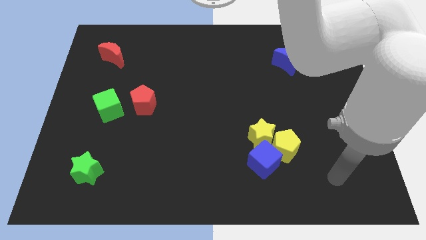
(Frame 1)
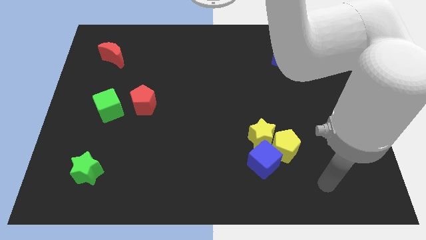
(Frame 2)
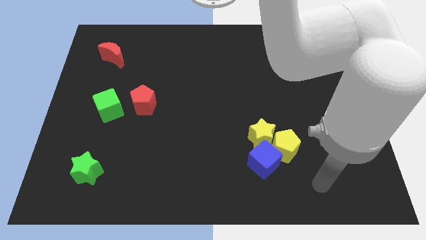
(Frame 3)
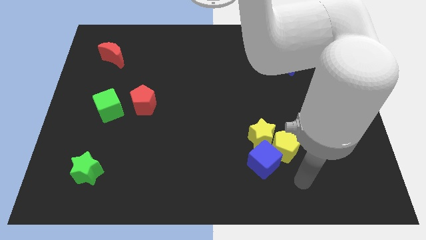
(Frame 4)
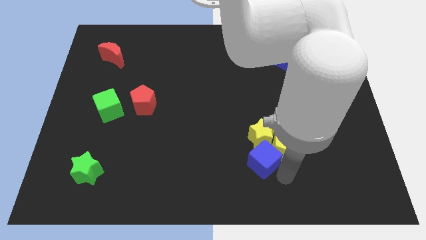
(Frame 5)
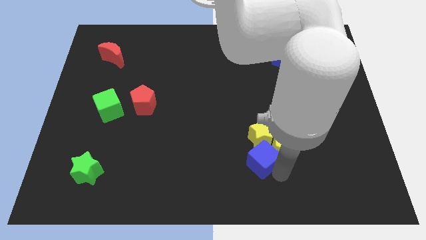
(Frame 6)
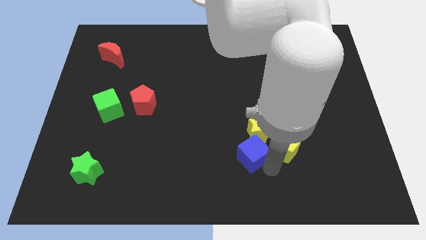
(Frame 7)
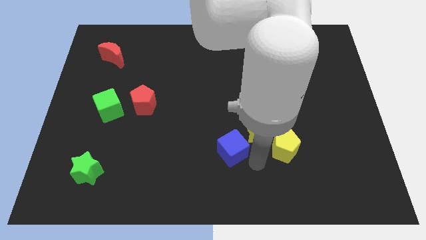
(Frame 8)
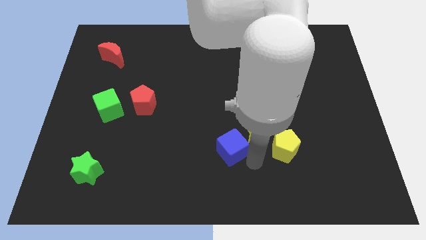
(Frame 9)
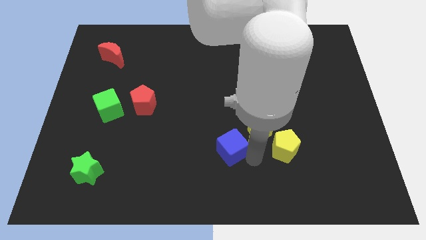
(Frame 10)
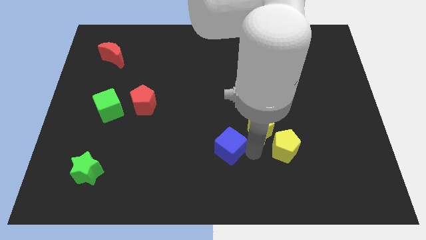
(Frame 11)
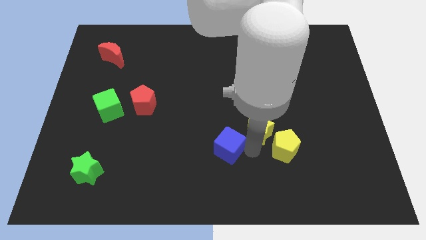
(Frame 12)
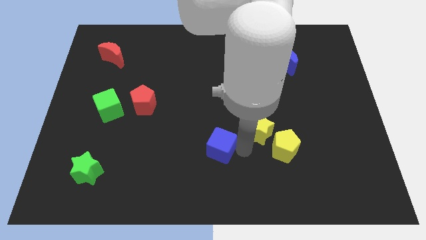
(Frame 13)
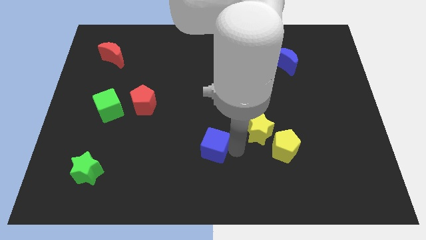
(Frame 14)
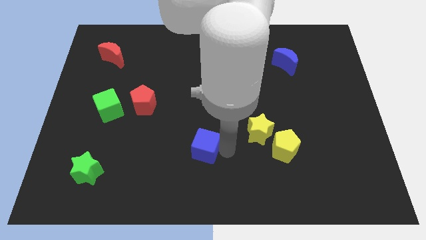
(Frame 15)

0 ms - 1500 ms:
separate blue cube from the yellow star

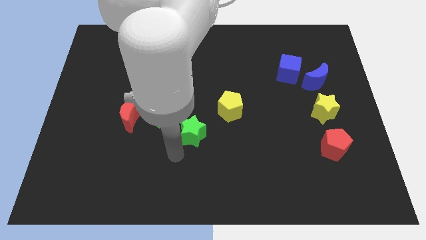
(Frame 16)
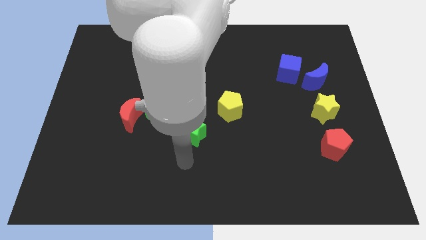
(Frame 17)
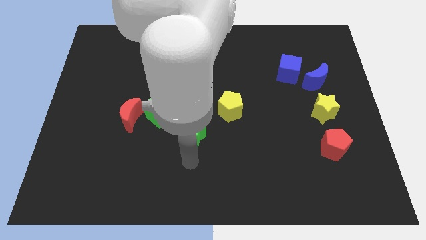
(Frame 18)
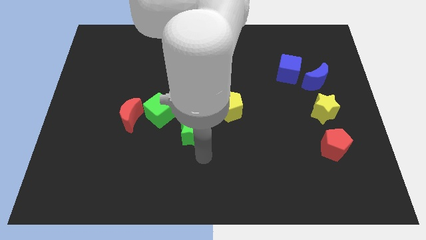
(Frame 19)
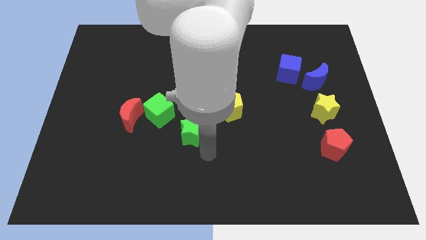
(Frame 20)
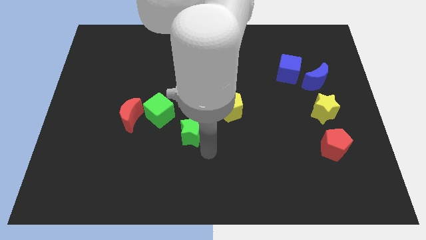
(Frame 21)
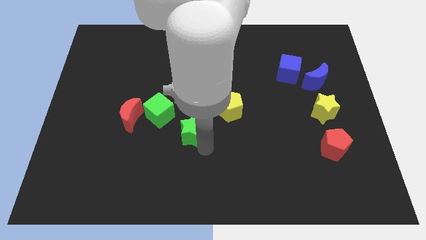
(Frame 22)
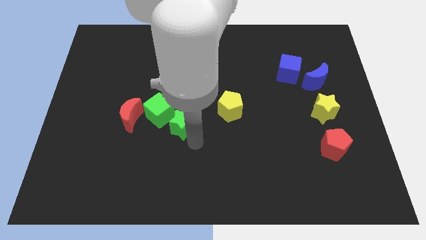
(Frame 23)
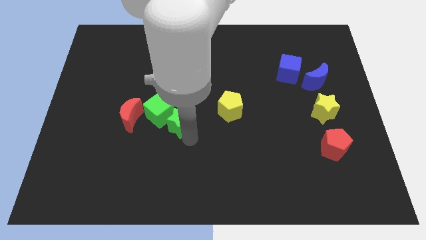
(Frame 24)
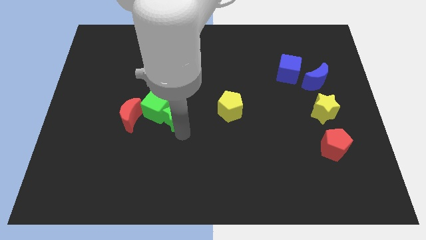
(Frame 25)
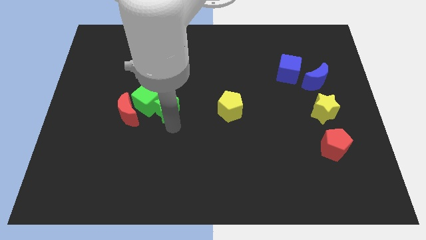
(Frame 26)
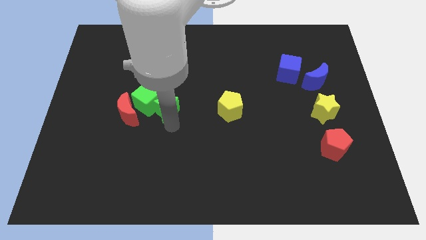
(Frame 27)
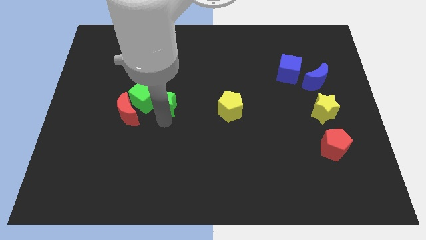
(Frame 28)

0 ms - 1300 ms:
move the green star into green cube

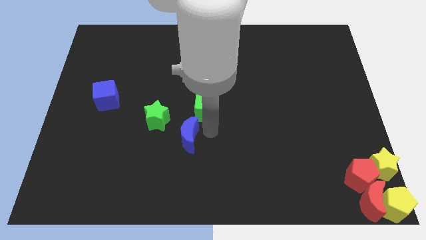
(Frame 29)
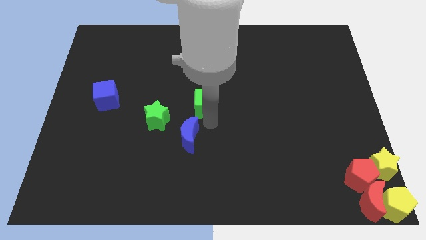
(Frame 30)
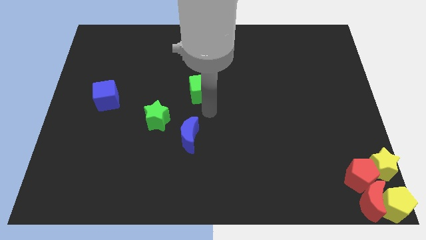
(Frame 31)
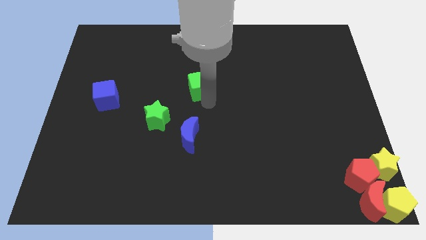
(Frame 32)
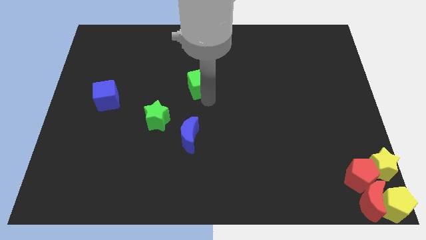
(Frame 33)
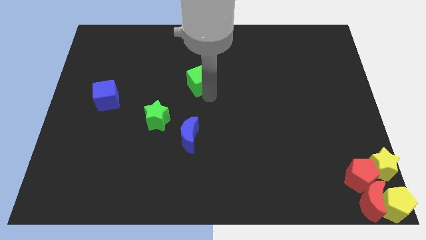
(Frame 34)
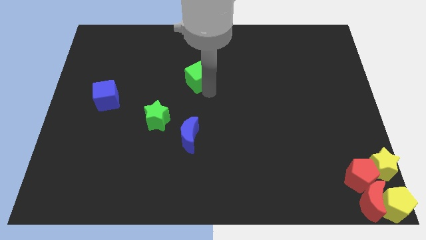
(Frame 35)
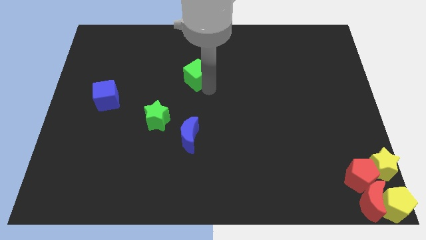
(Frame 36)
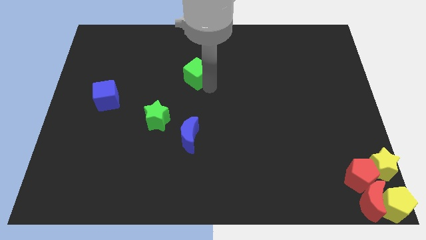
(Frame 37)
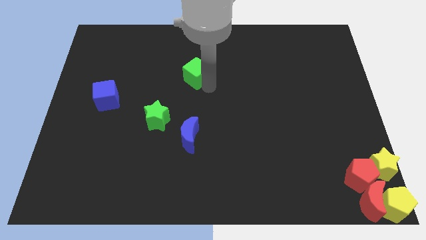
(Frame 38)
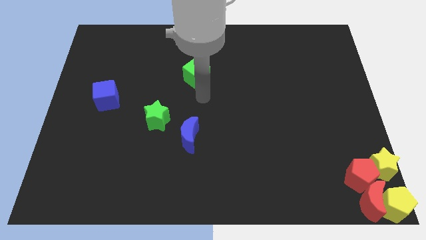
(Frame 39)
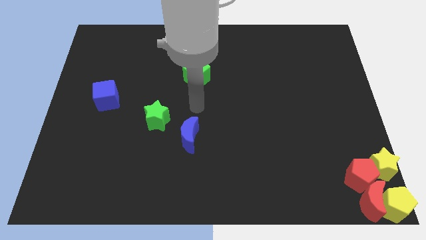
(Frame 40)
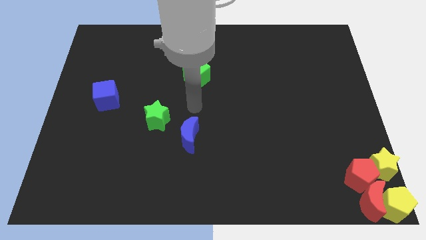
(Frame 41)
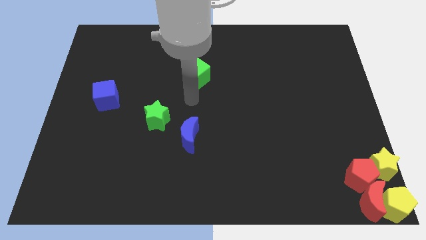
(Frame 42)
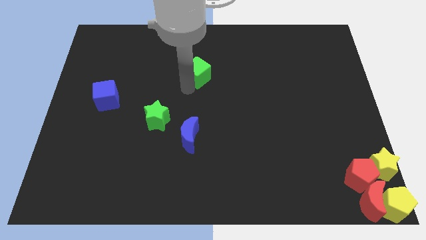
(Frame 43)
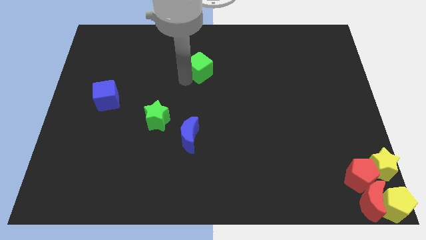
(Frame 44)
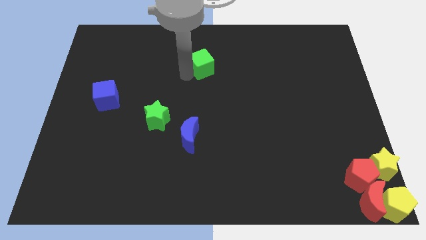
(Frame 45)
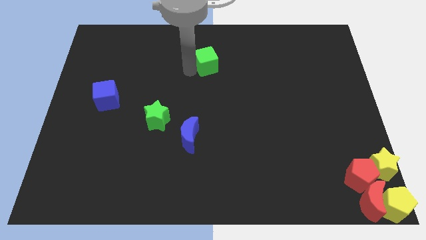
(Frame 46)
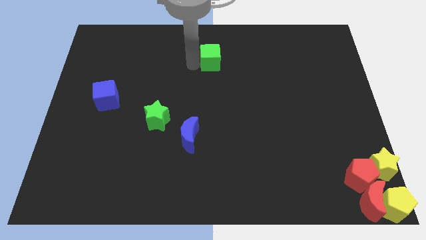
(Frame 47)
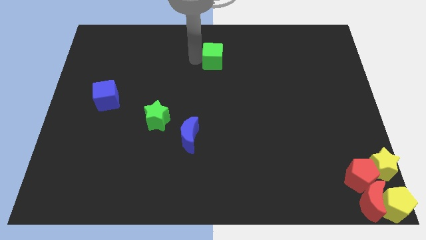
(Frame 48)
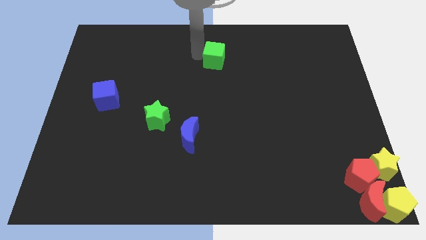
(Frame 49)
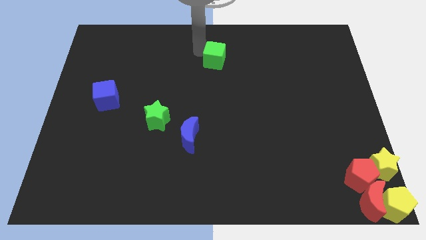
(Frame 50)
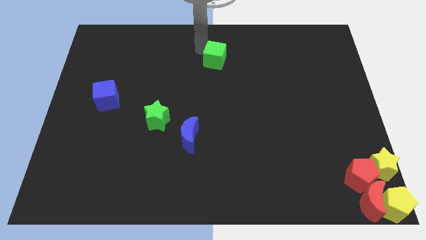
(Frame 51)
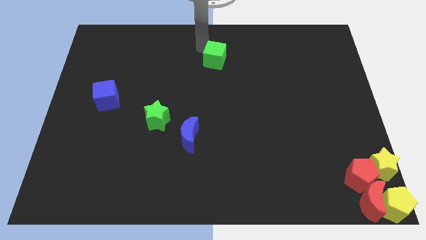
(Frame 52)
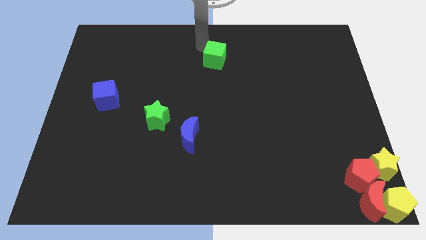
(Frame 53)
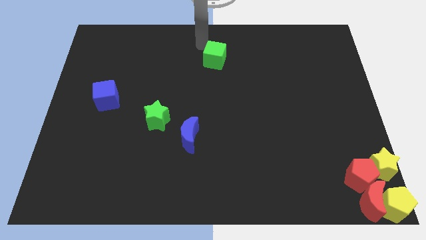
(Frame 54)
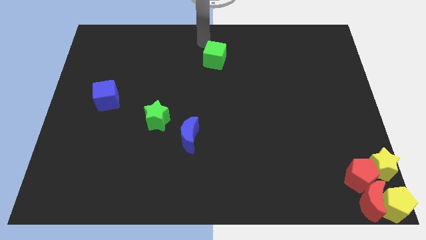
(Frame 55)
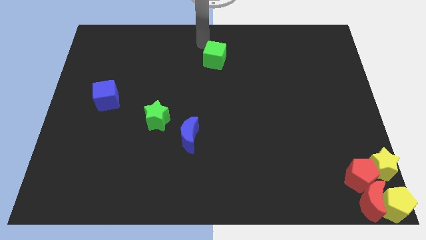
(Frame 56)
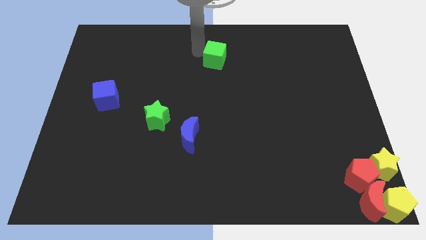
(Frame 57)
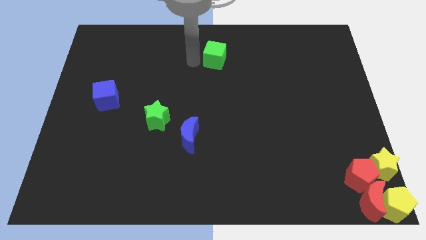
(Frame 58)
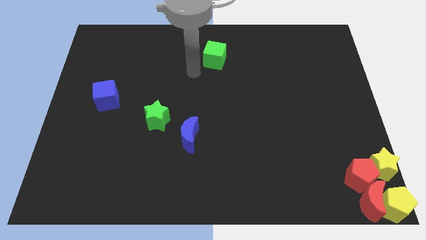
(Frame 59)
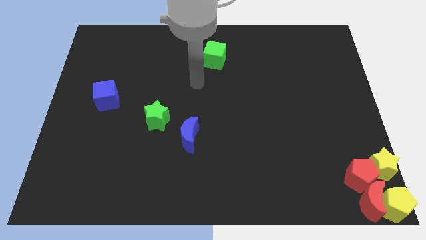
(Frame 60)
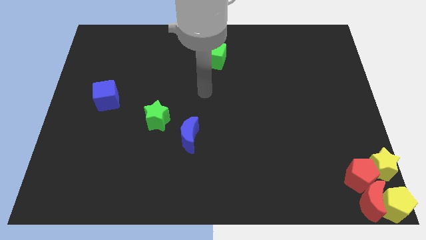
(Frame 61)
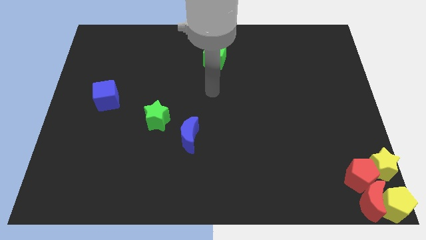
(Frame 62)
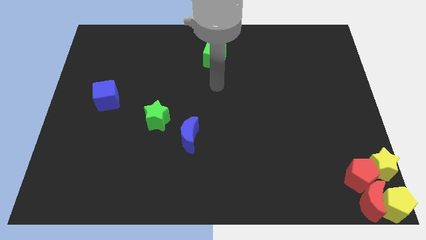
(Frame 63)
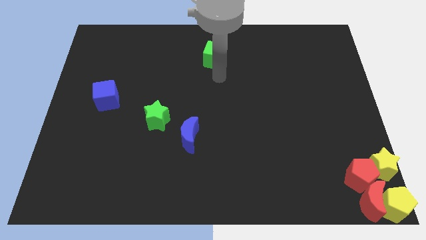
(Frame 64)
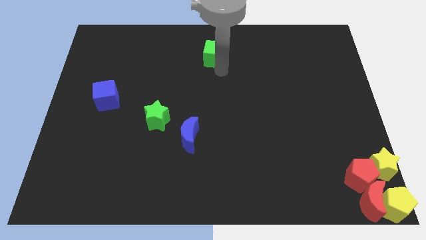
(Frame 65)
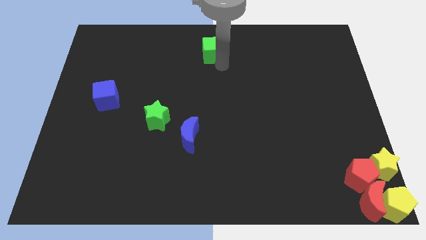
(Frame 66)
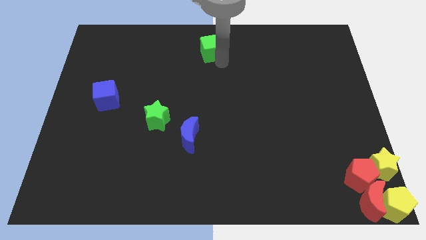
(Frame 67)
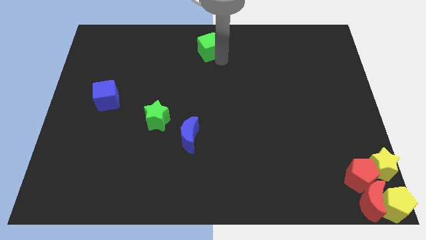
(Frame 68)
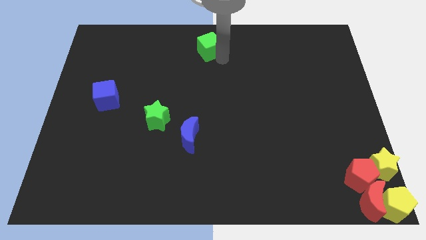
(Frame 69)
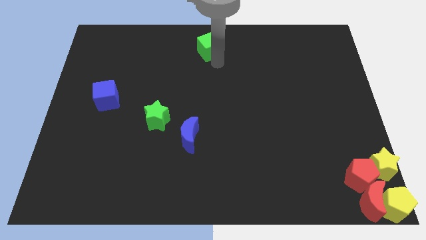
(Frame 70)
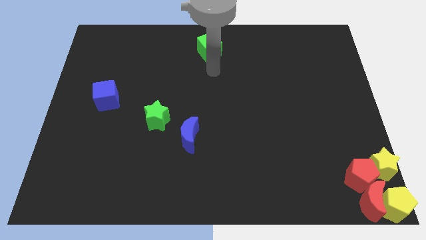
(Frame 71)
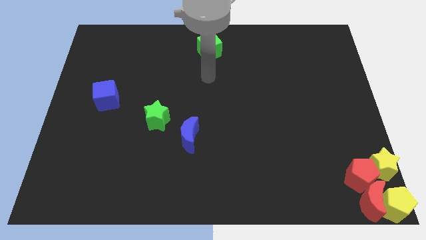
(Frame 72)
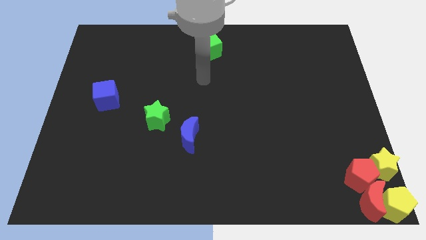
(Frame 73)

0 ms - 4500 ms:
move the green cube to top center vertically to the blue crescent

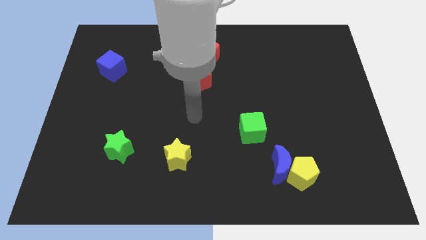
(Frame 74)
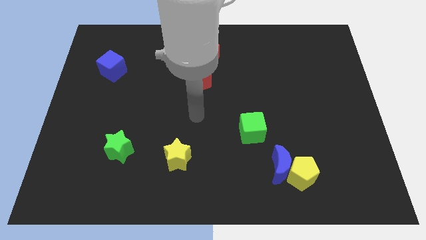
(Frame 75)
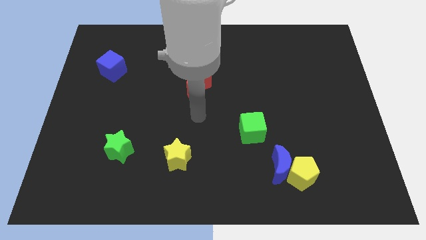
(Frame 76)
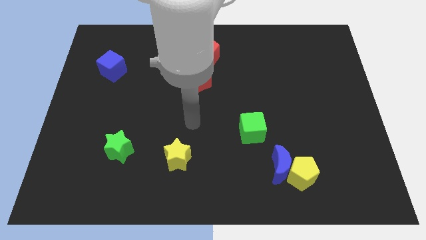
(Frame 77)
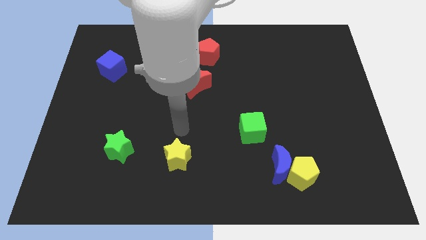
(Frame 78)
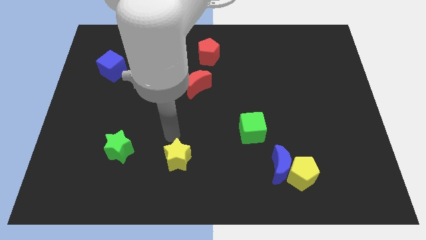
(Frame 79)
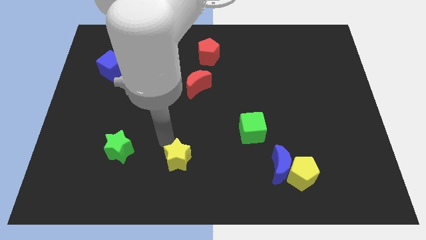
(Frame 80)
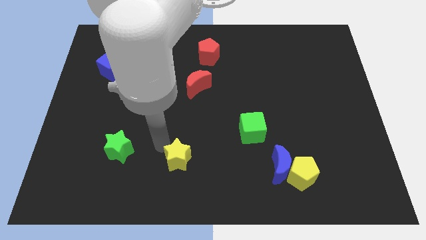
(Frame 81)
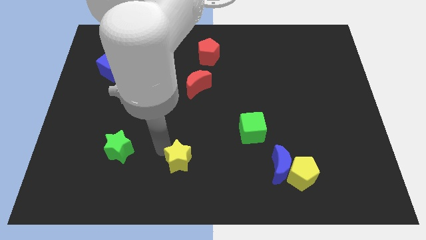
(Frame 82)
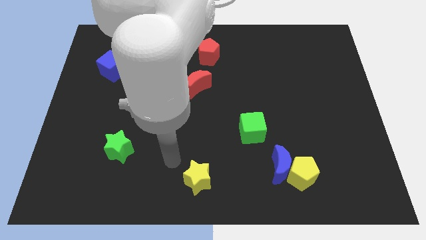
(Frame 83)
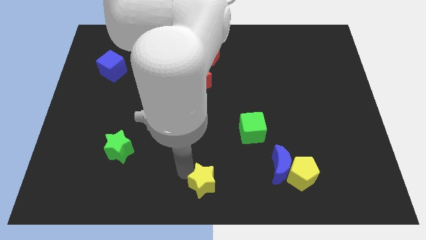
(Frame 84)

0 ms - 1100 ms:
slide yellow star towards bottom center

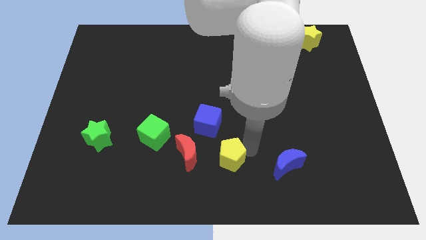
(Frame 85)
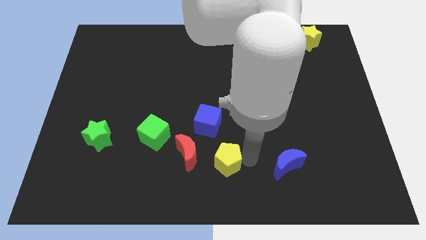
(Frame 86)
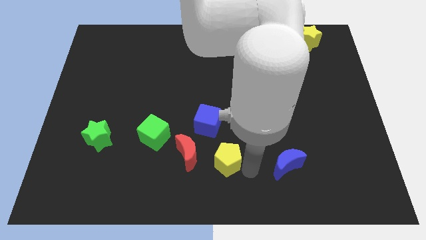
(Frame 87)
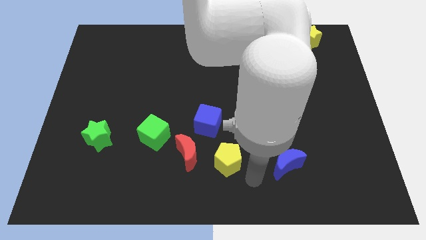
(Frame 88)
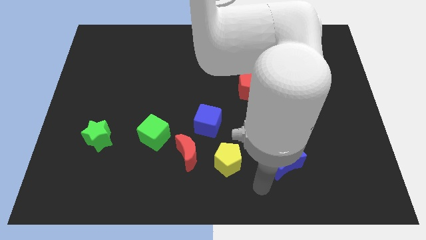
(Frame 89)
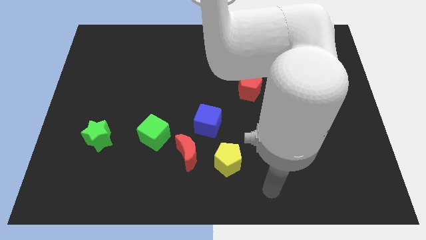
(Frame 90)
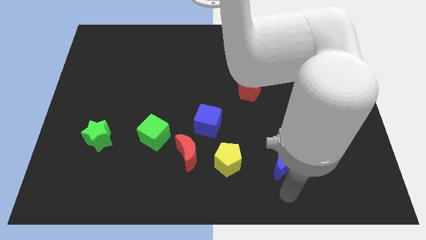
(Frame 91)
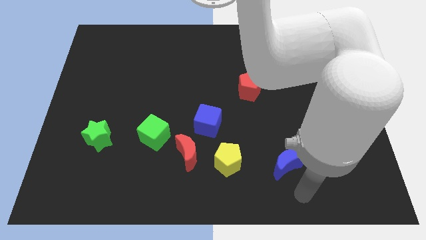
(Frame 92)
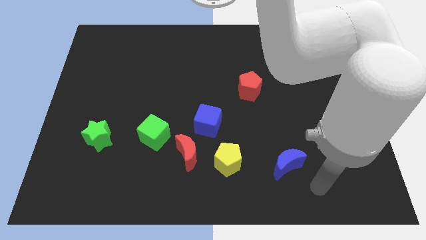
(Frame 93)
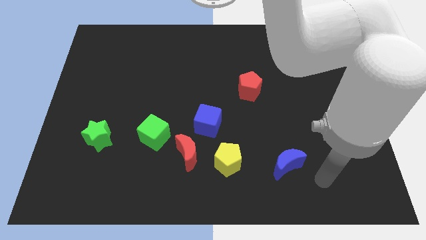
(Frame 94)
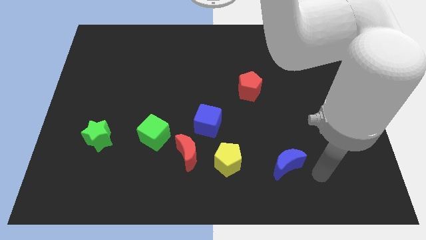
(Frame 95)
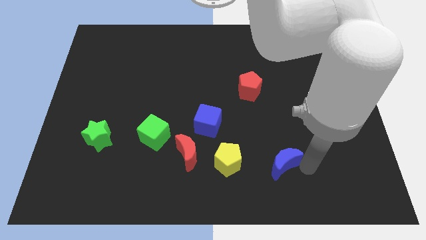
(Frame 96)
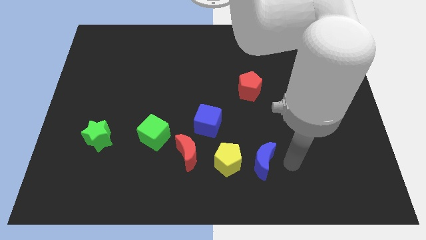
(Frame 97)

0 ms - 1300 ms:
move the blue moon towards the yellow pentagon
